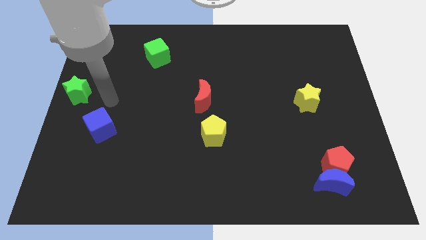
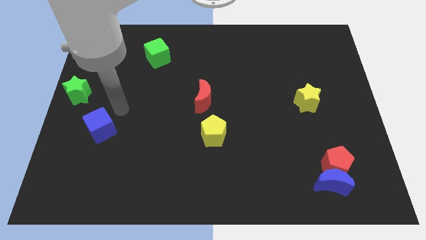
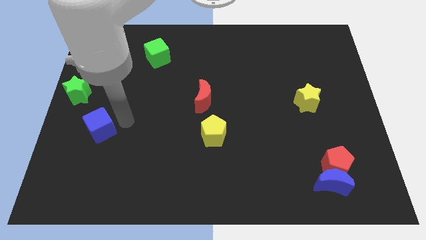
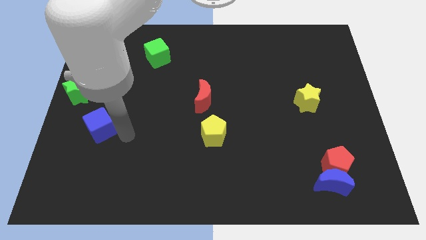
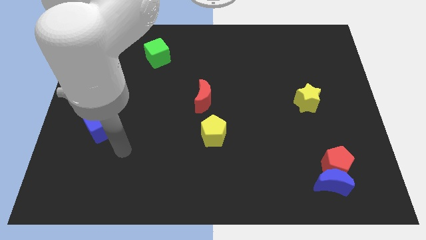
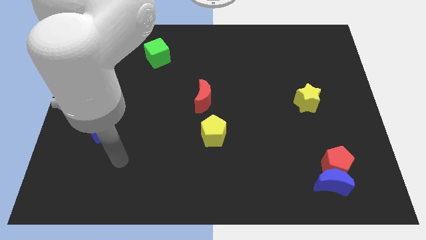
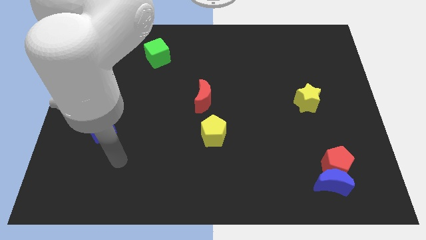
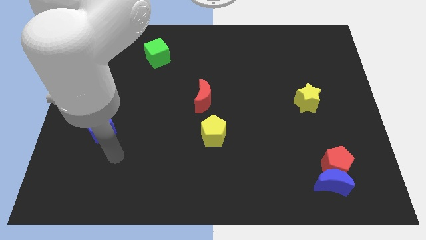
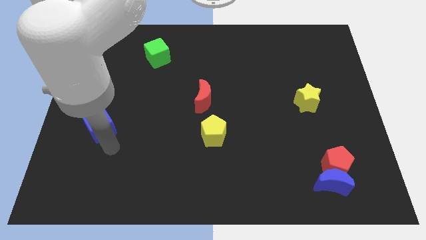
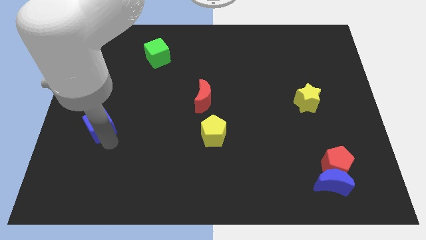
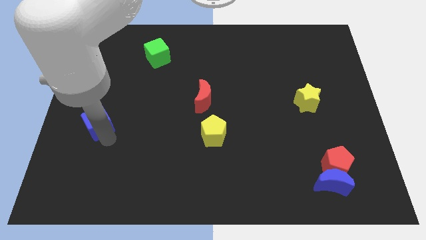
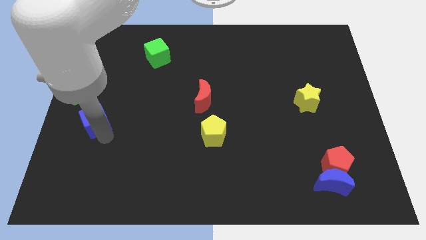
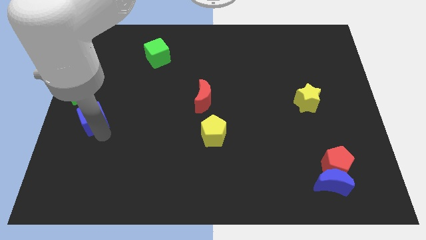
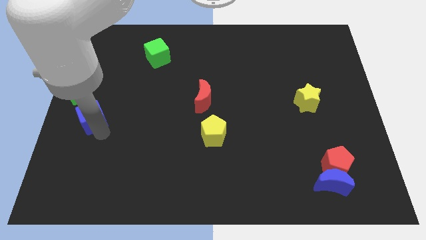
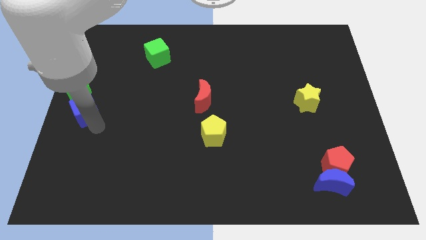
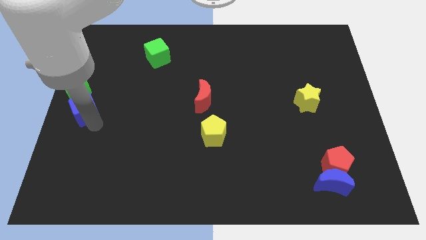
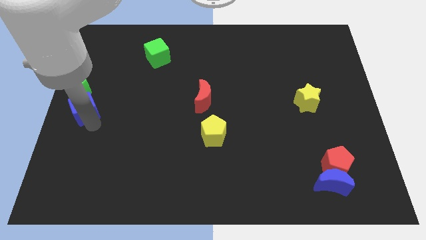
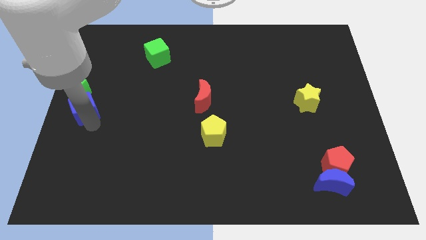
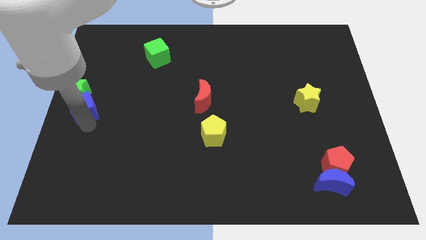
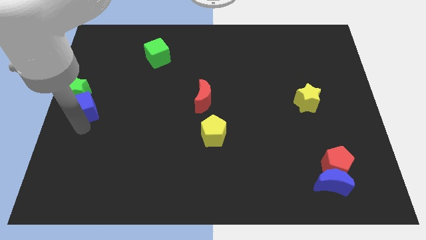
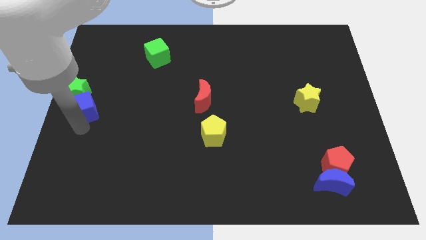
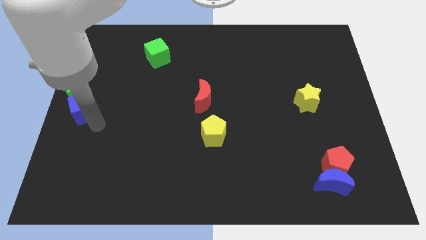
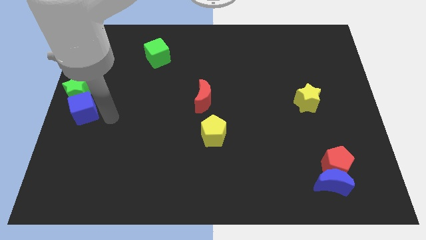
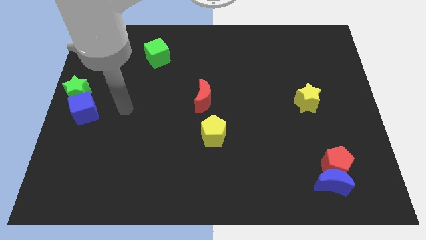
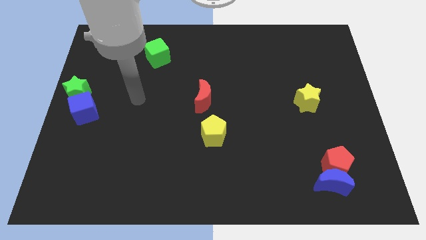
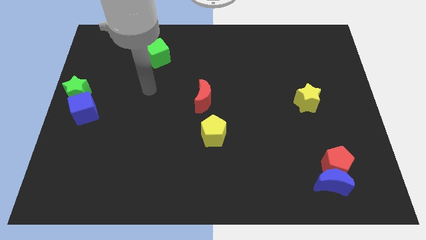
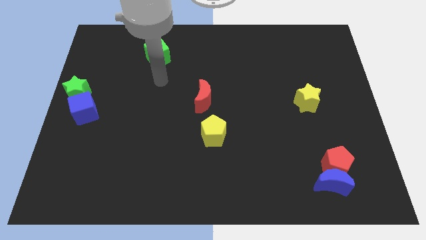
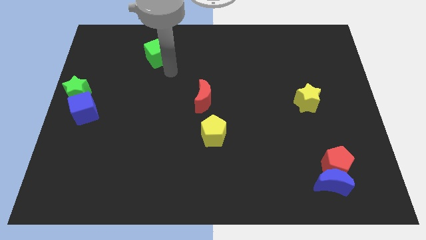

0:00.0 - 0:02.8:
place blue cube close to green star

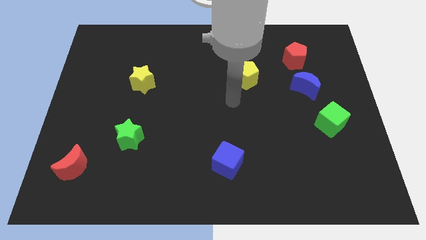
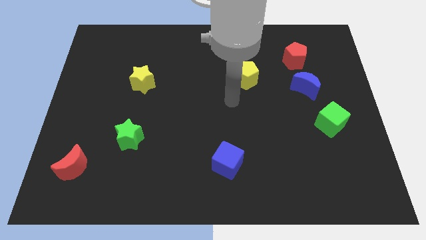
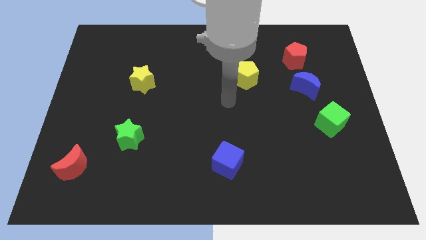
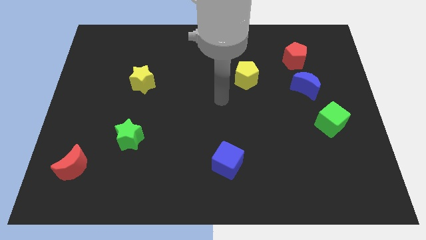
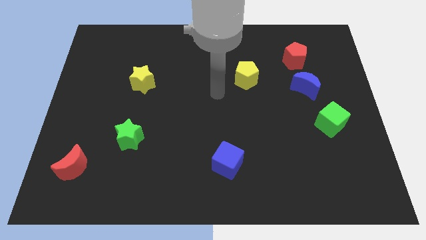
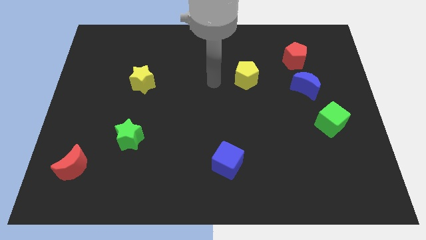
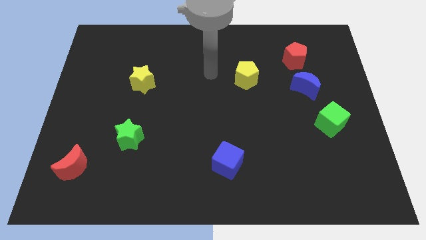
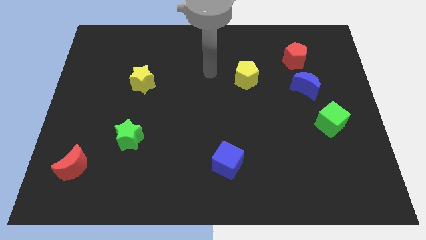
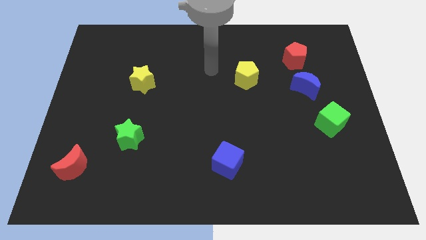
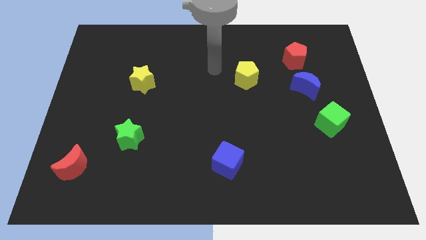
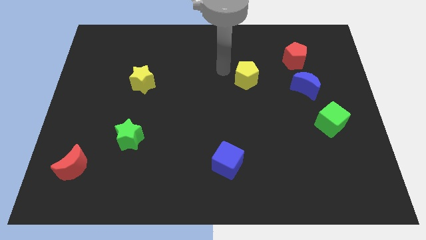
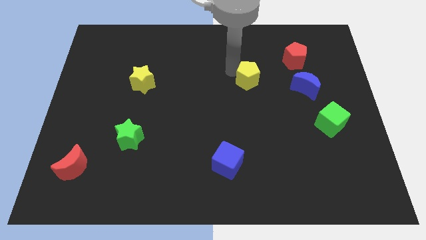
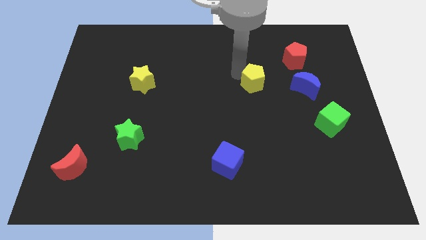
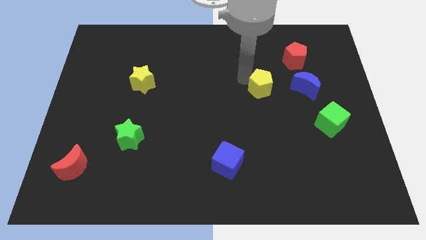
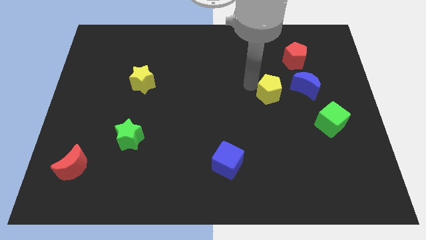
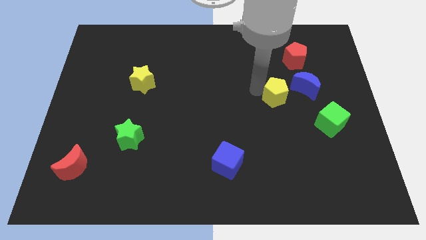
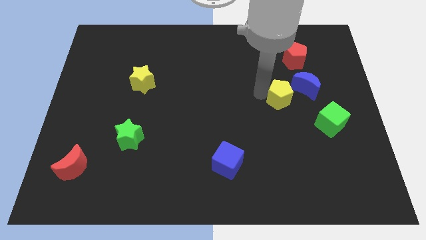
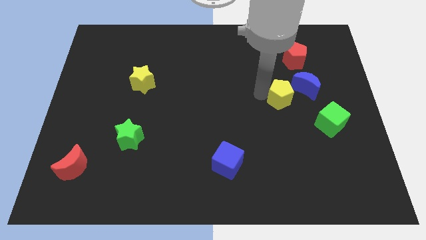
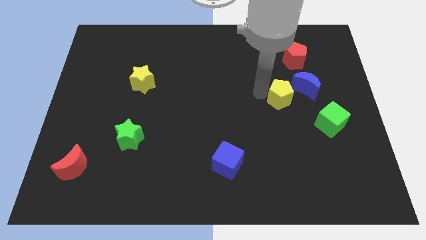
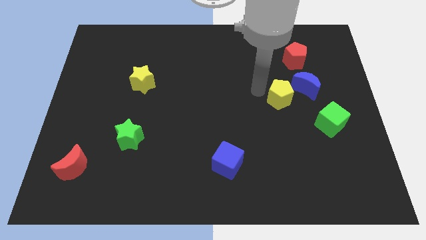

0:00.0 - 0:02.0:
move yellow pentagon to the left of blue moon

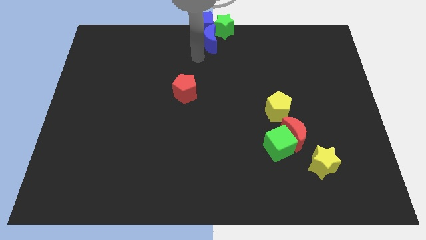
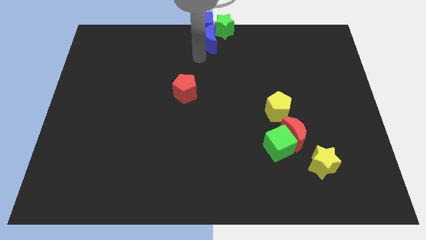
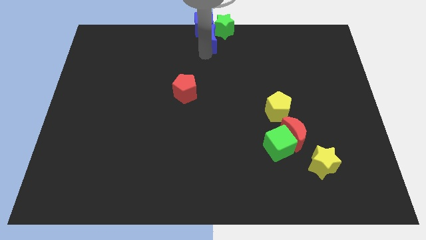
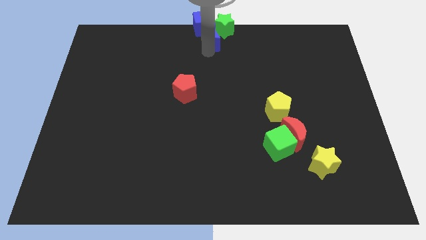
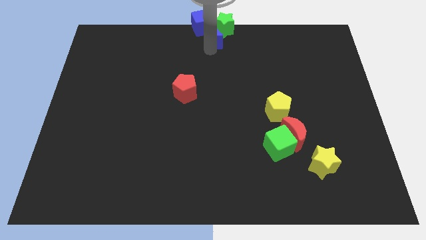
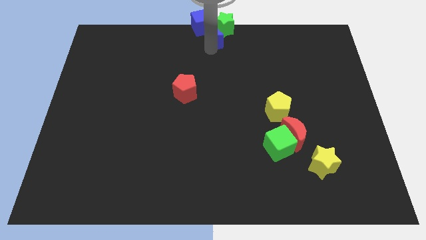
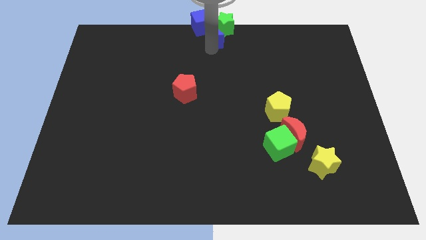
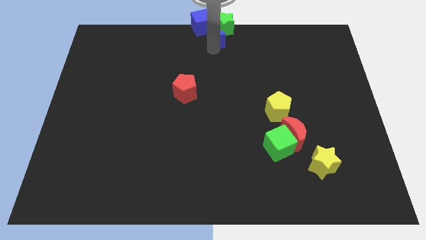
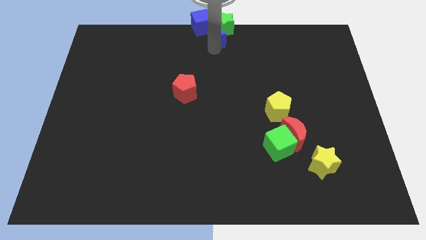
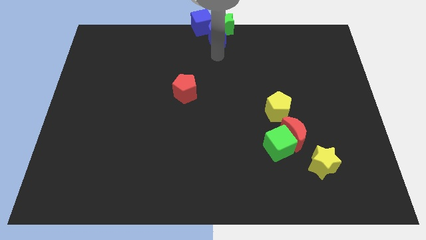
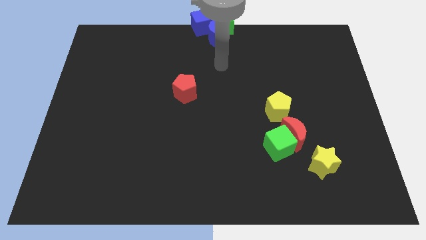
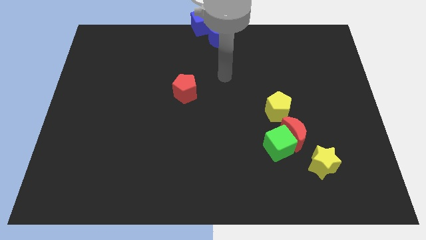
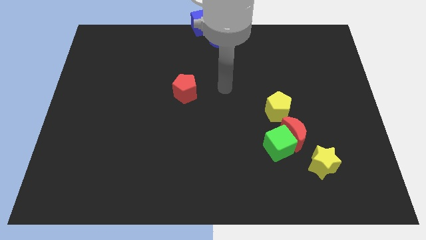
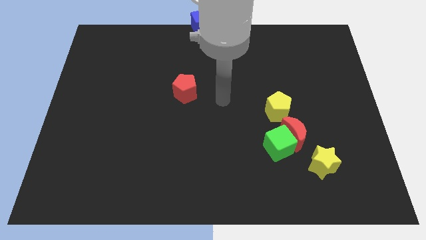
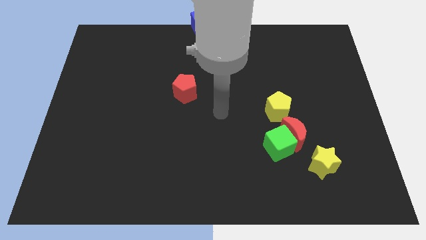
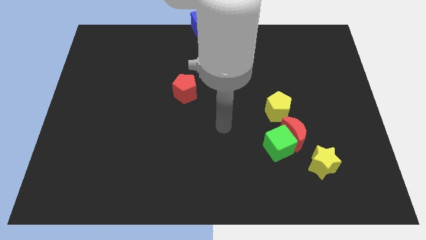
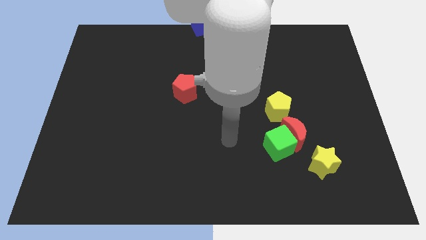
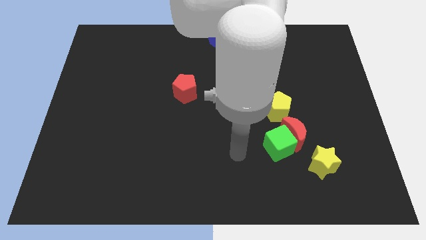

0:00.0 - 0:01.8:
place the blue crescent at the top center

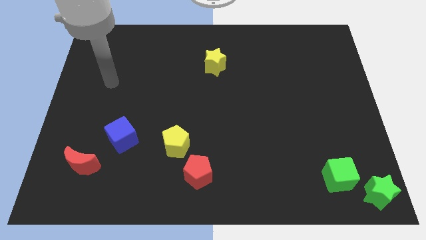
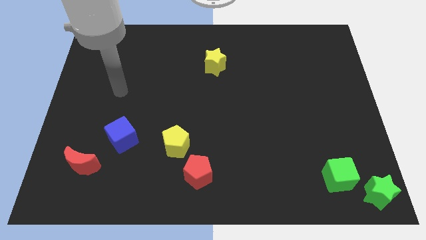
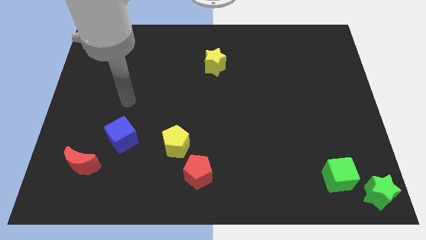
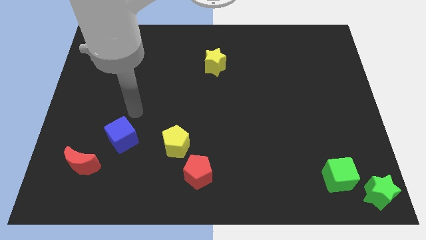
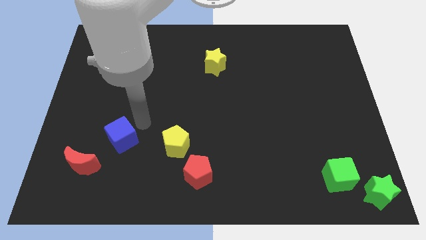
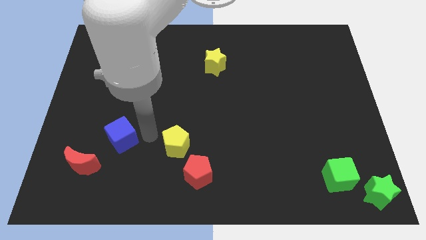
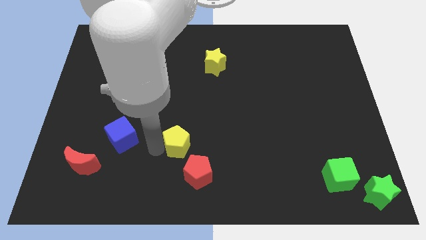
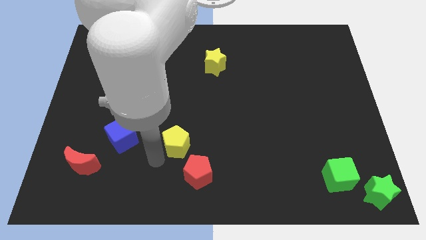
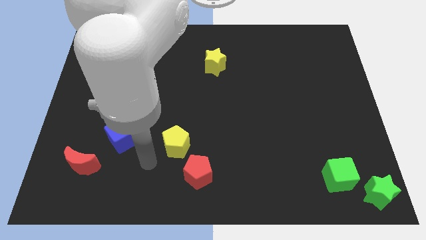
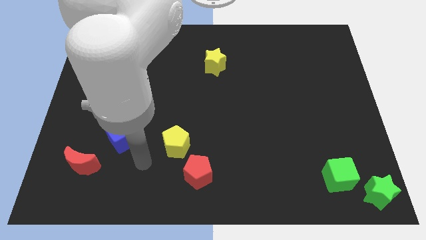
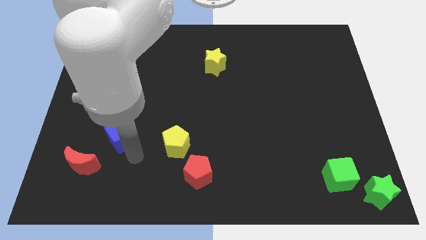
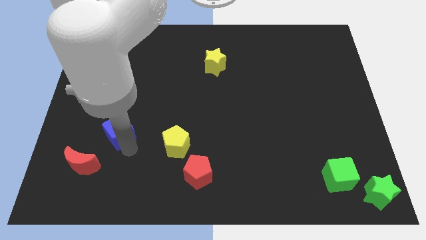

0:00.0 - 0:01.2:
move your arm towards the bottom of the blue cube at the bottom left the board

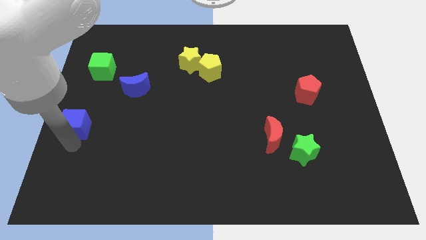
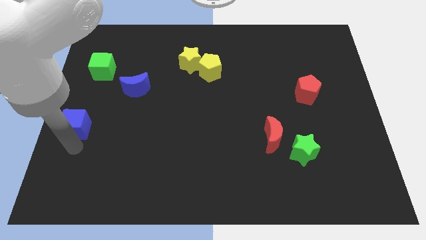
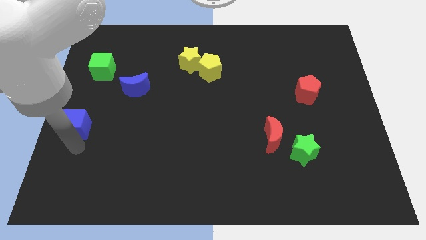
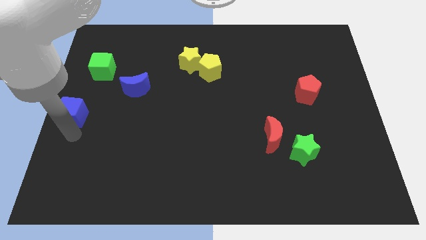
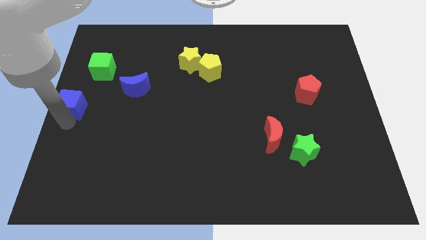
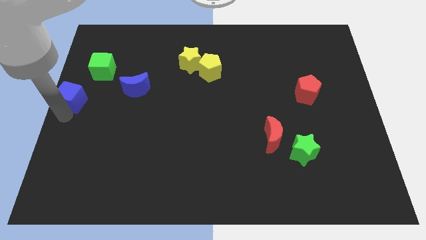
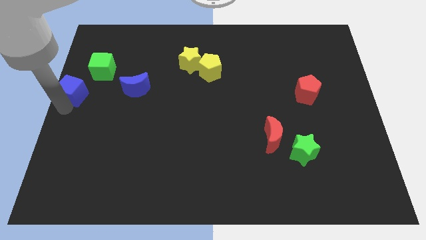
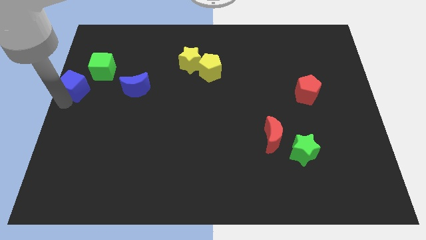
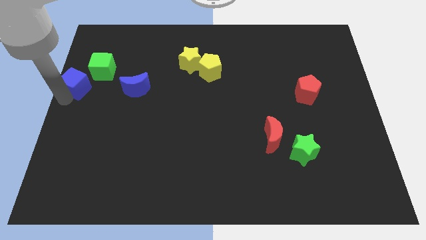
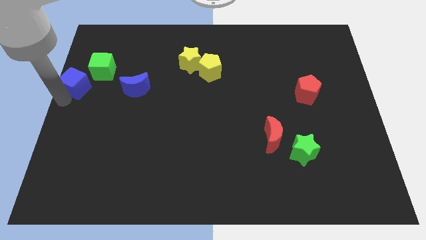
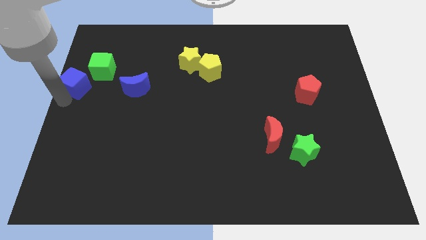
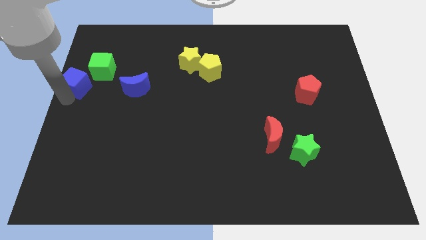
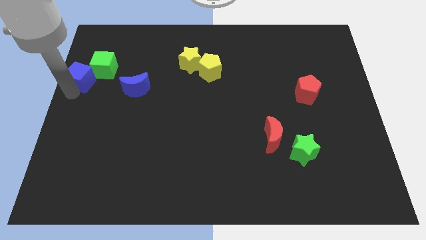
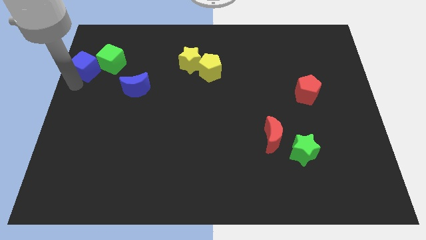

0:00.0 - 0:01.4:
push blue cube into the green cube
